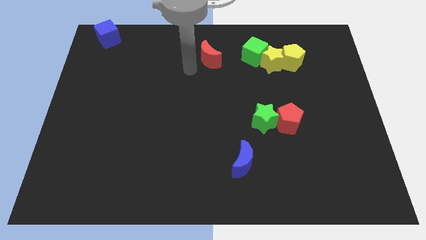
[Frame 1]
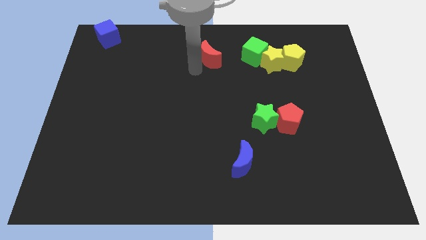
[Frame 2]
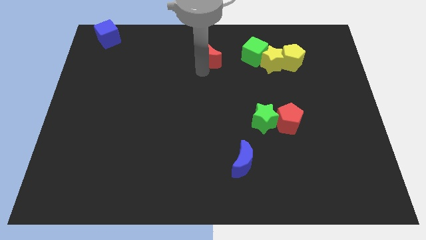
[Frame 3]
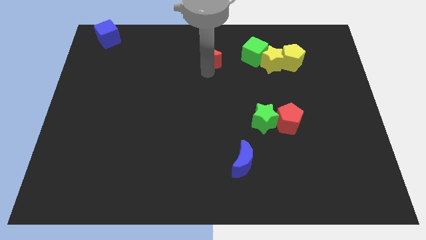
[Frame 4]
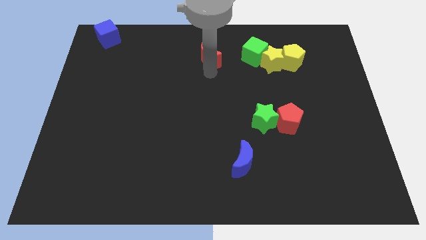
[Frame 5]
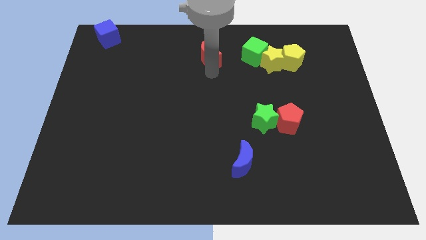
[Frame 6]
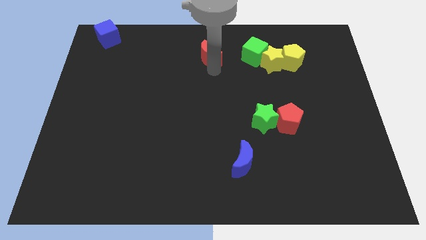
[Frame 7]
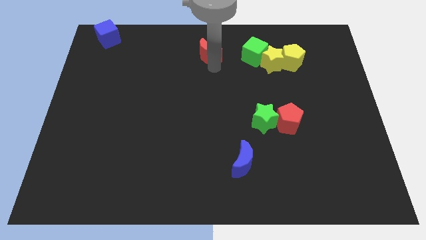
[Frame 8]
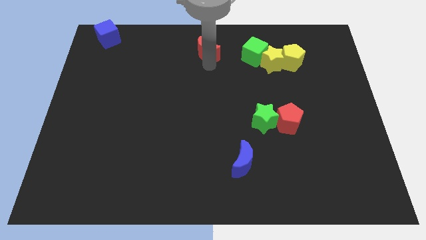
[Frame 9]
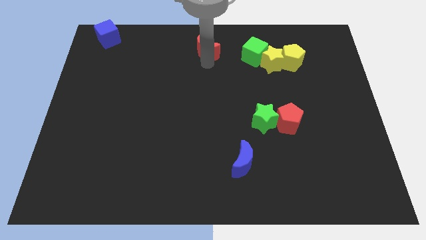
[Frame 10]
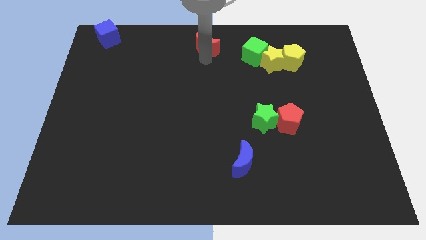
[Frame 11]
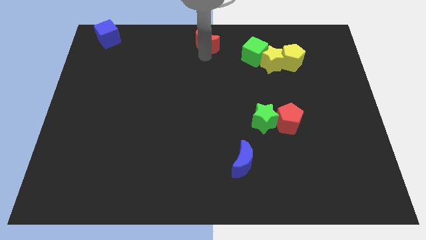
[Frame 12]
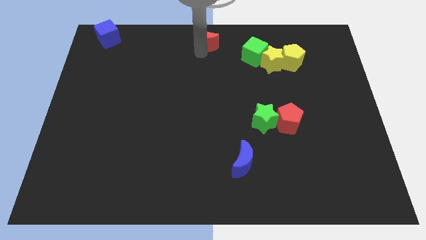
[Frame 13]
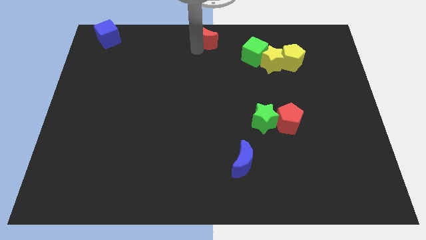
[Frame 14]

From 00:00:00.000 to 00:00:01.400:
push the red crescent to the top center of the board

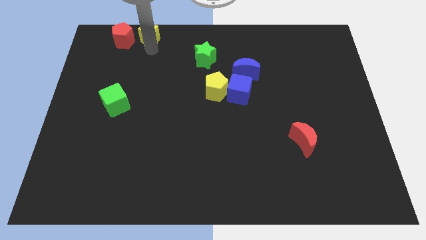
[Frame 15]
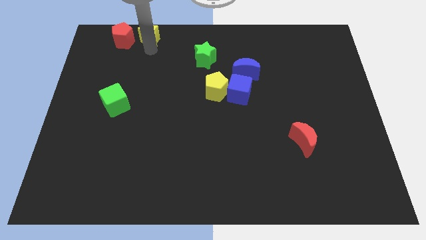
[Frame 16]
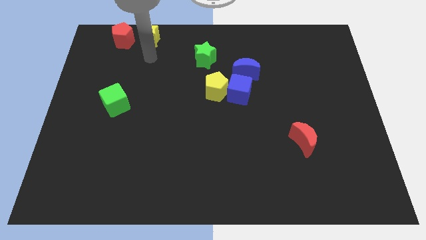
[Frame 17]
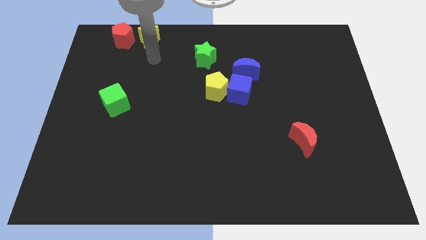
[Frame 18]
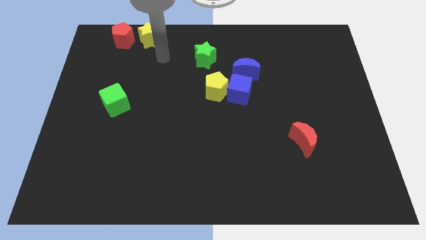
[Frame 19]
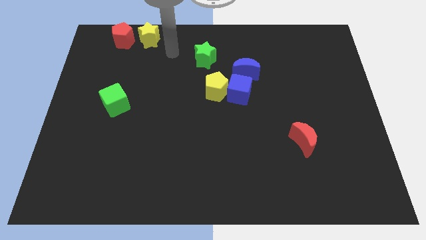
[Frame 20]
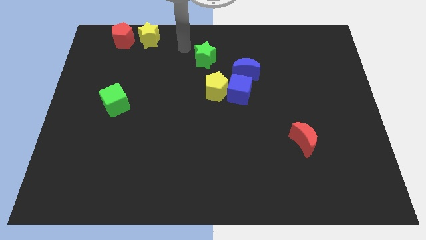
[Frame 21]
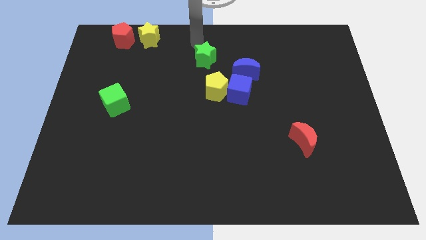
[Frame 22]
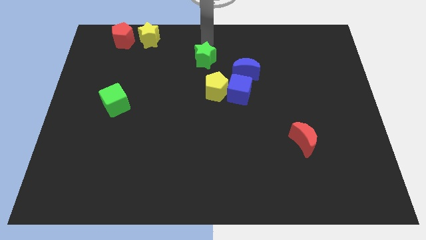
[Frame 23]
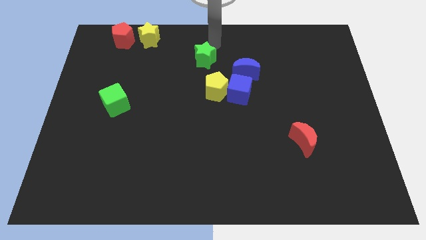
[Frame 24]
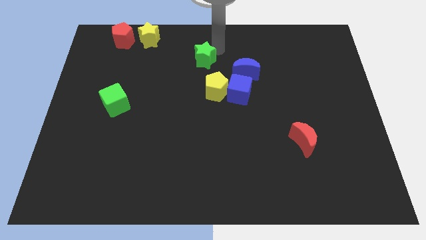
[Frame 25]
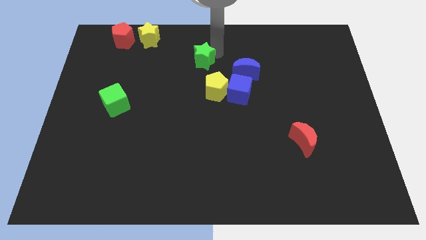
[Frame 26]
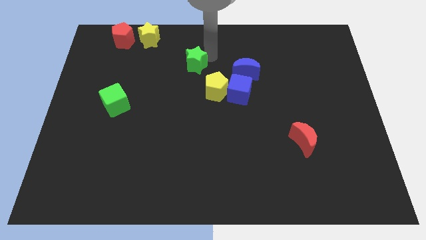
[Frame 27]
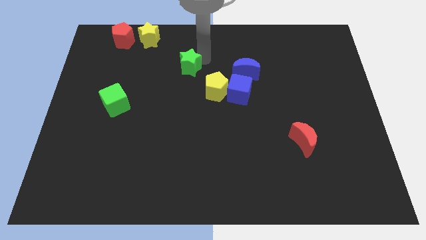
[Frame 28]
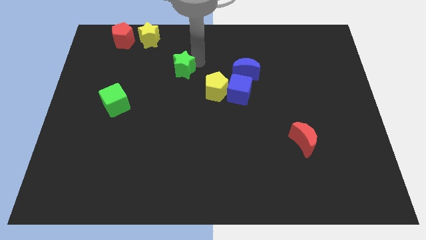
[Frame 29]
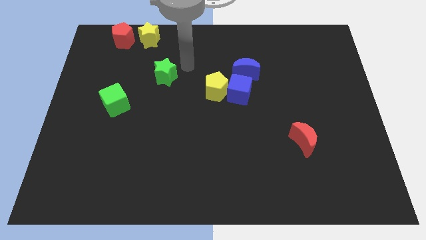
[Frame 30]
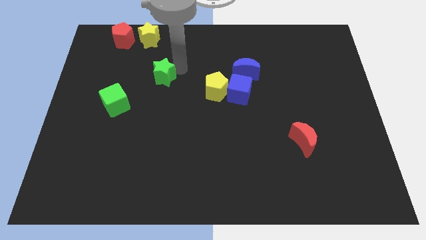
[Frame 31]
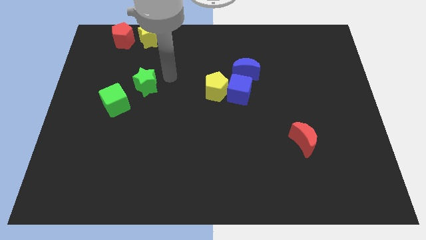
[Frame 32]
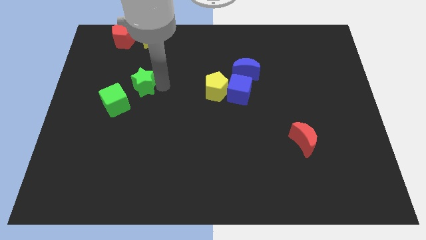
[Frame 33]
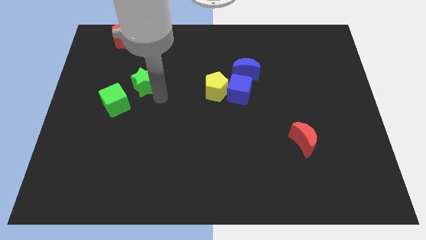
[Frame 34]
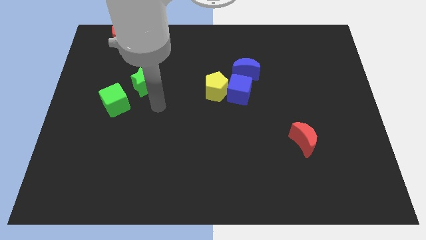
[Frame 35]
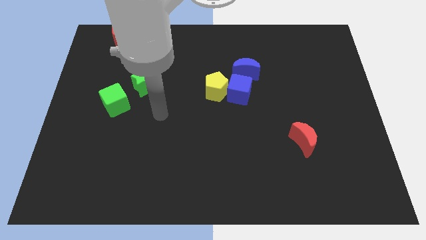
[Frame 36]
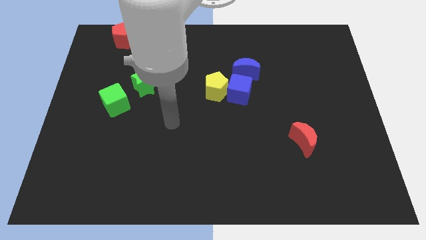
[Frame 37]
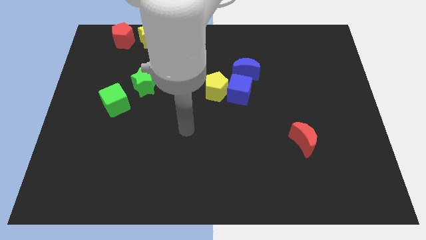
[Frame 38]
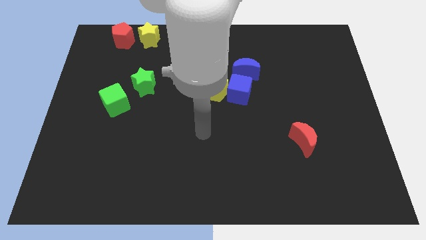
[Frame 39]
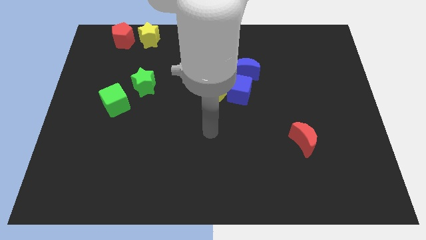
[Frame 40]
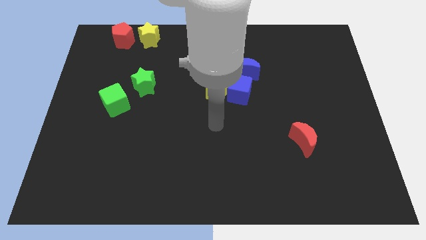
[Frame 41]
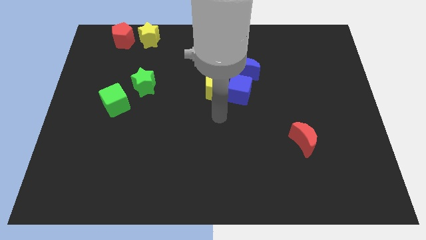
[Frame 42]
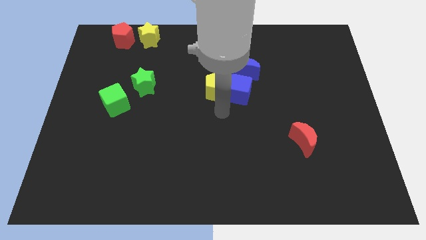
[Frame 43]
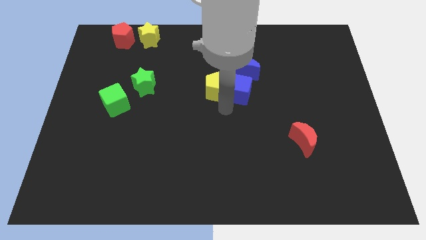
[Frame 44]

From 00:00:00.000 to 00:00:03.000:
place the green star below the yellow star

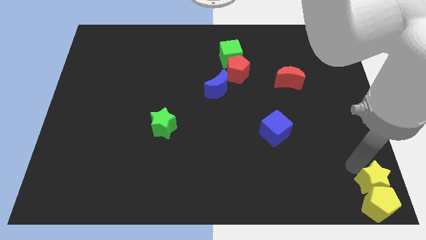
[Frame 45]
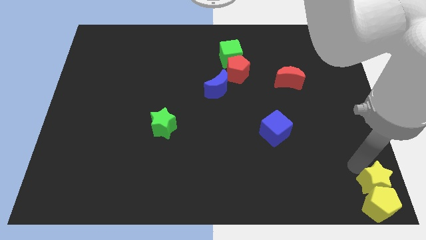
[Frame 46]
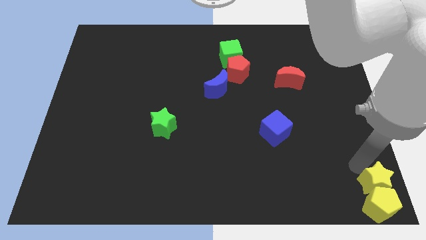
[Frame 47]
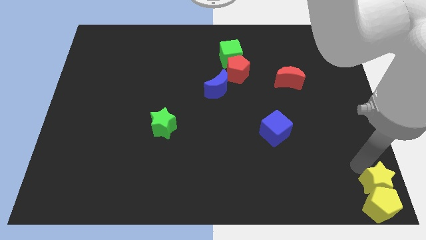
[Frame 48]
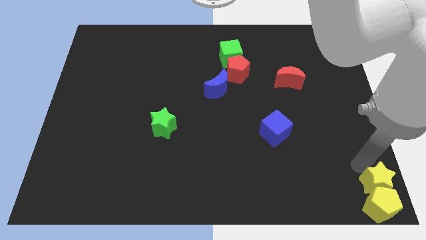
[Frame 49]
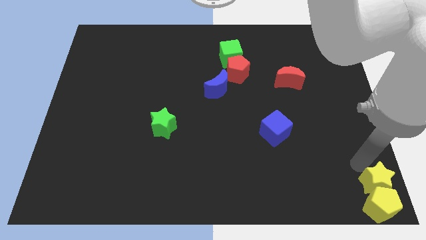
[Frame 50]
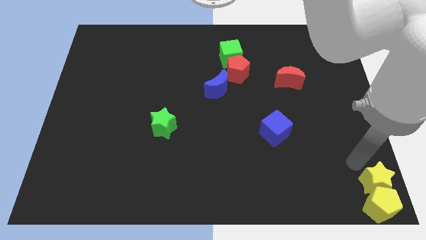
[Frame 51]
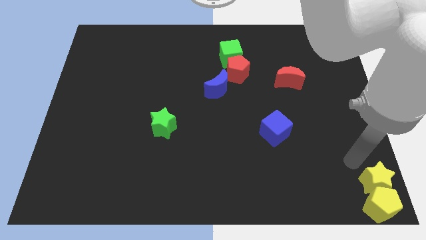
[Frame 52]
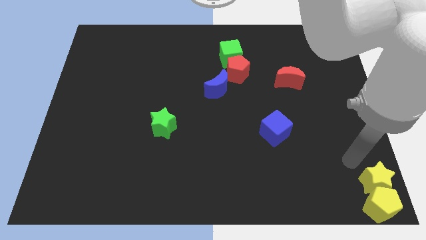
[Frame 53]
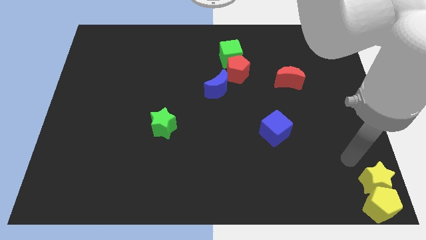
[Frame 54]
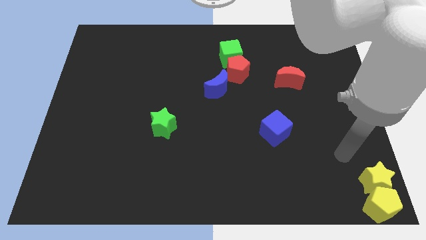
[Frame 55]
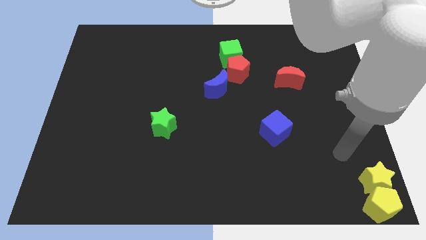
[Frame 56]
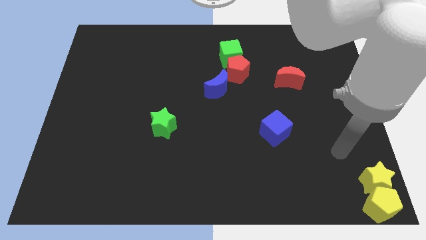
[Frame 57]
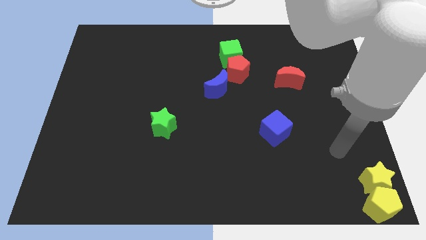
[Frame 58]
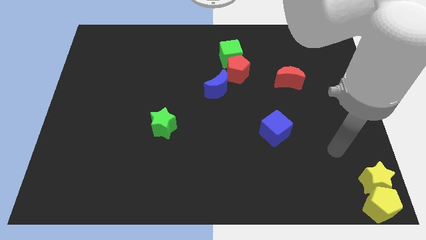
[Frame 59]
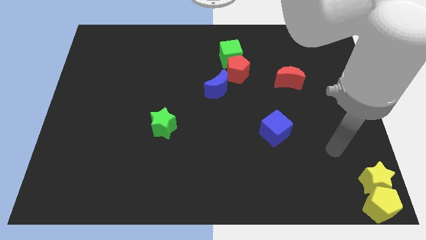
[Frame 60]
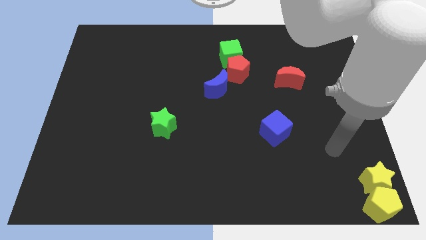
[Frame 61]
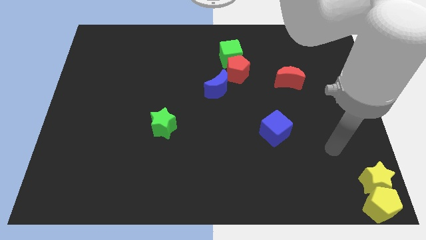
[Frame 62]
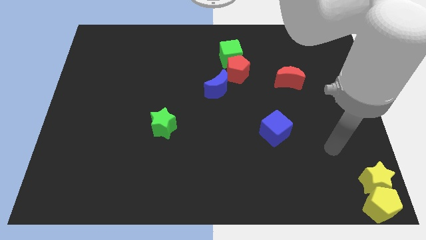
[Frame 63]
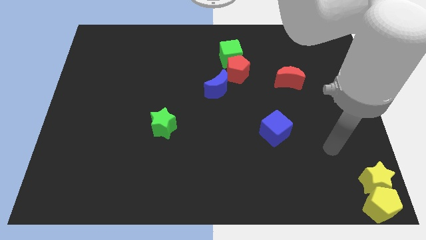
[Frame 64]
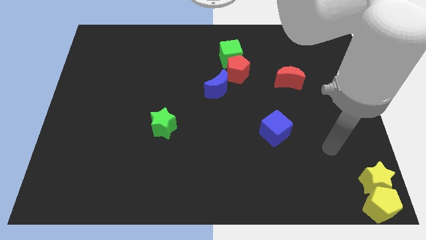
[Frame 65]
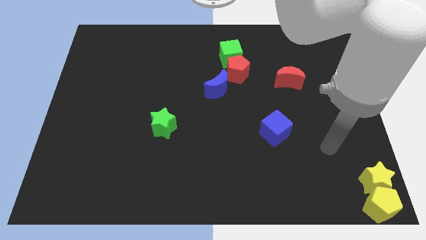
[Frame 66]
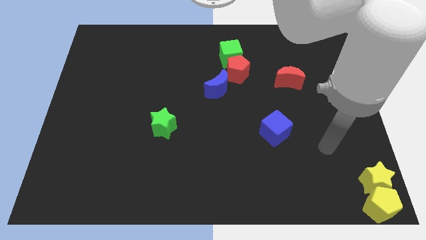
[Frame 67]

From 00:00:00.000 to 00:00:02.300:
move the yellow blocks to bottom right corner of the board

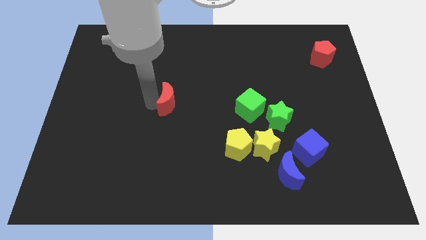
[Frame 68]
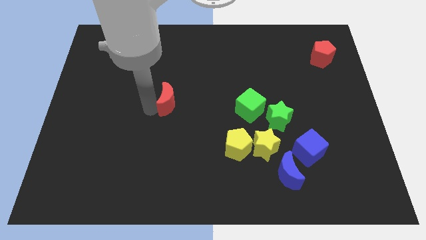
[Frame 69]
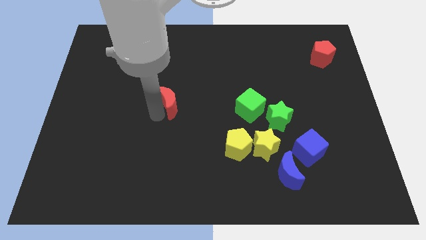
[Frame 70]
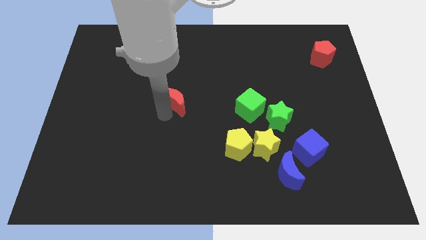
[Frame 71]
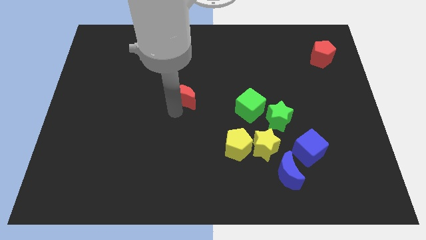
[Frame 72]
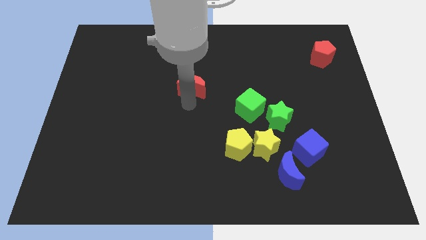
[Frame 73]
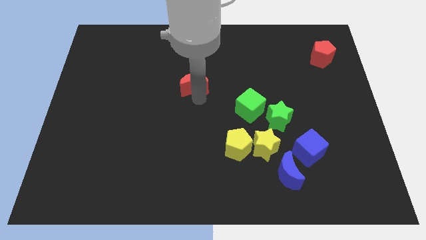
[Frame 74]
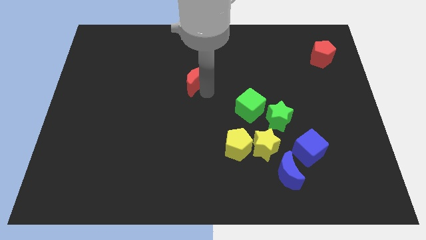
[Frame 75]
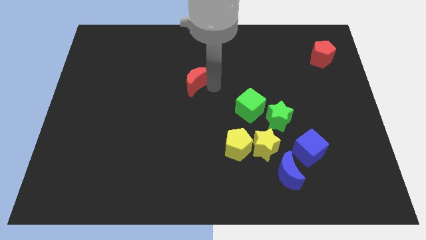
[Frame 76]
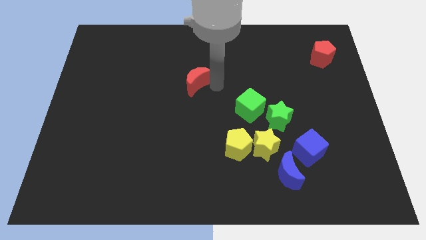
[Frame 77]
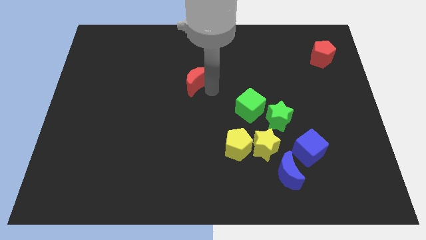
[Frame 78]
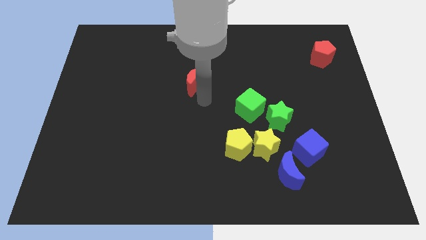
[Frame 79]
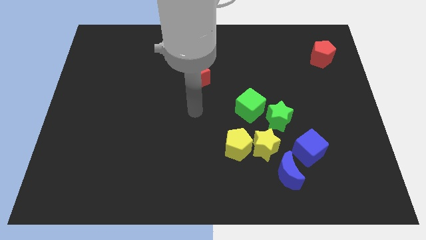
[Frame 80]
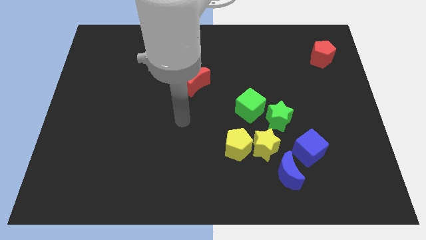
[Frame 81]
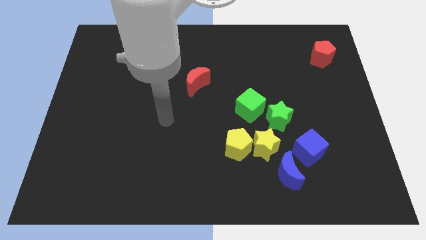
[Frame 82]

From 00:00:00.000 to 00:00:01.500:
place the red crescent to the top left side of the group of blocks

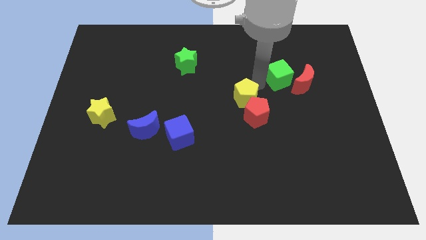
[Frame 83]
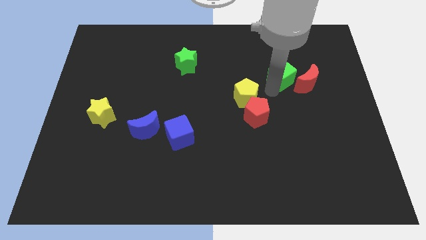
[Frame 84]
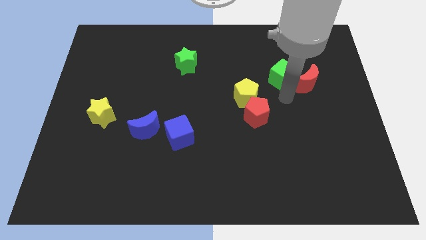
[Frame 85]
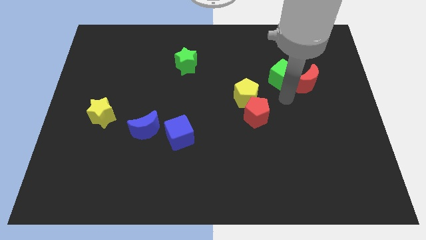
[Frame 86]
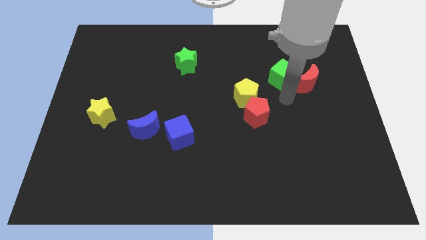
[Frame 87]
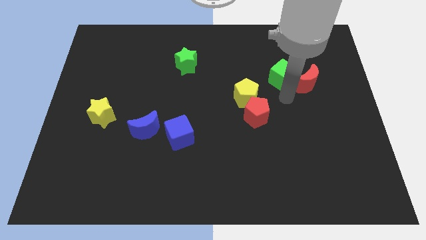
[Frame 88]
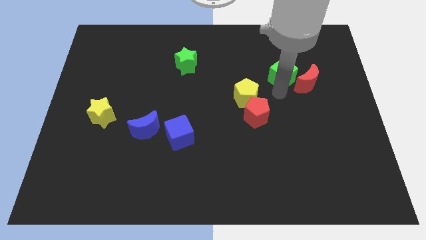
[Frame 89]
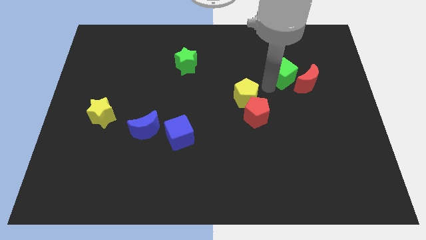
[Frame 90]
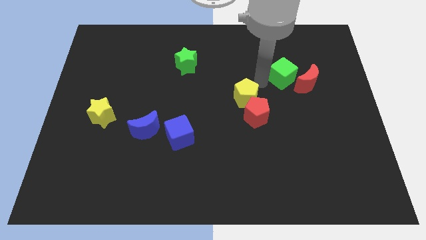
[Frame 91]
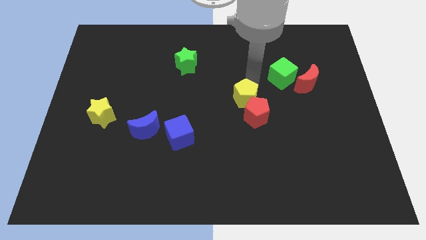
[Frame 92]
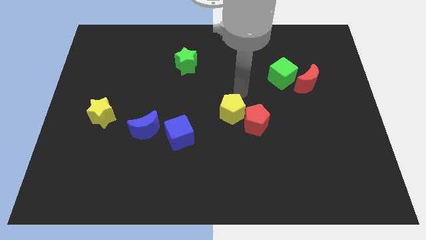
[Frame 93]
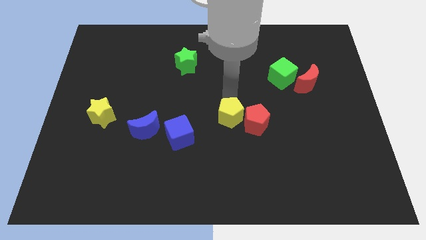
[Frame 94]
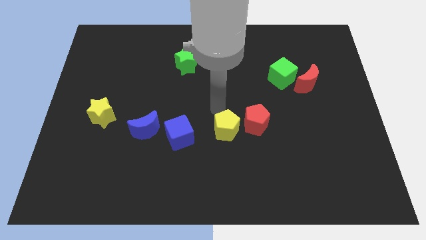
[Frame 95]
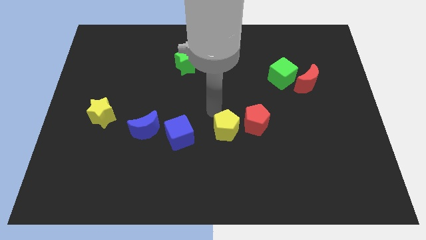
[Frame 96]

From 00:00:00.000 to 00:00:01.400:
place yellow pentagon left to red pentagon
